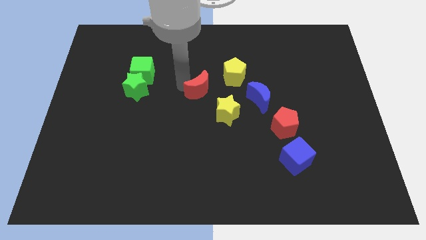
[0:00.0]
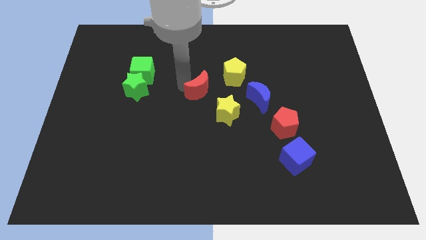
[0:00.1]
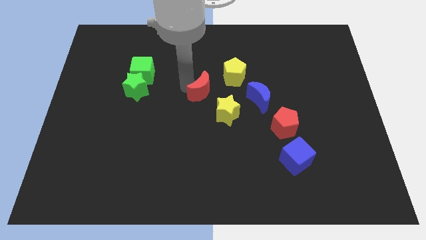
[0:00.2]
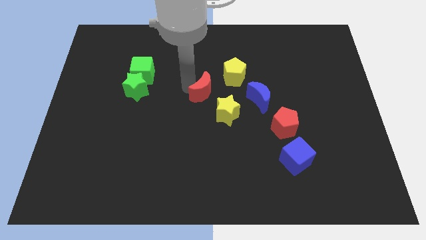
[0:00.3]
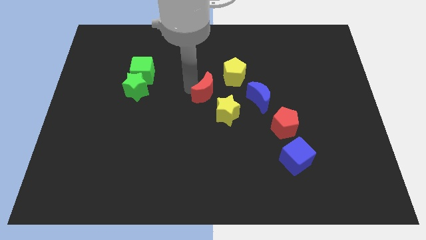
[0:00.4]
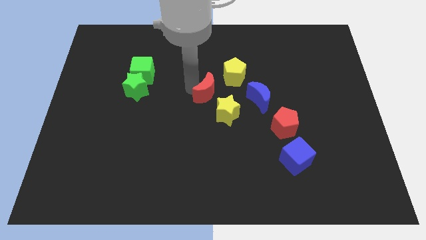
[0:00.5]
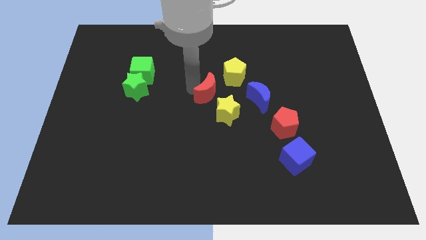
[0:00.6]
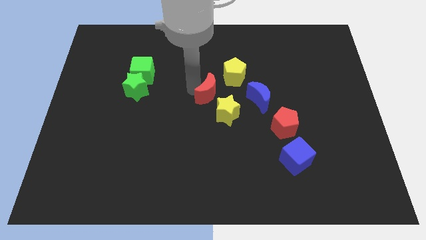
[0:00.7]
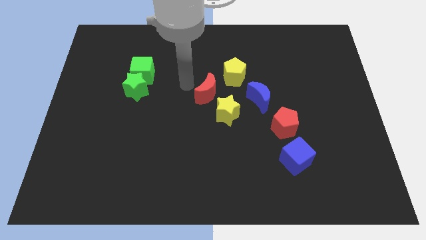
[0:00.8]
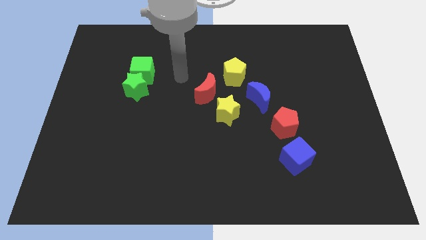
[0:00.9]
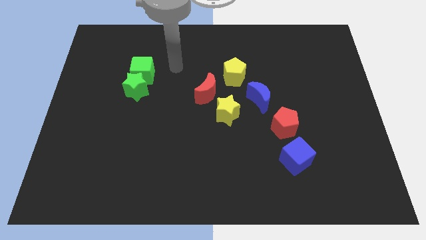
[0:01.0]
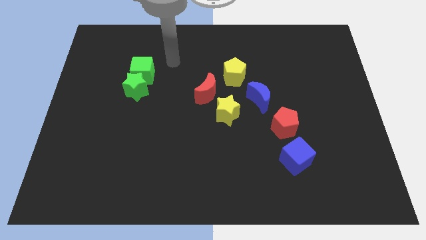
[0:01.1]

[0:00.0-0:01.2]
slightly move the red moon to the center

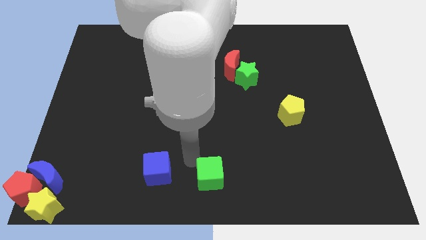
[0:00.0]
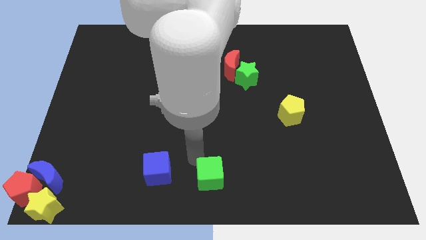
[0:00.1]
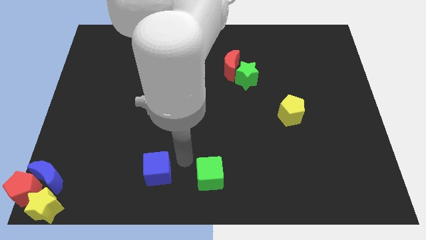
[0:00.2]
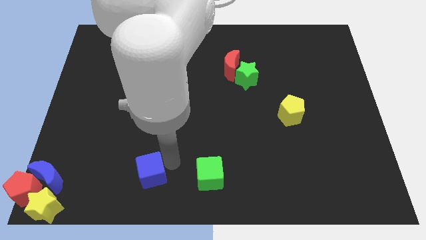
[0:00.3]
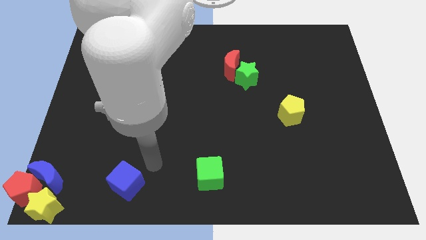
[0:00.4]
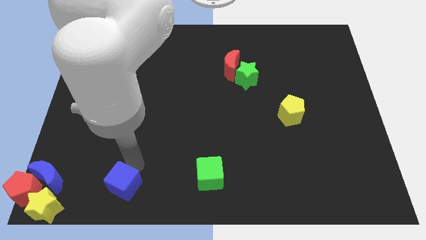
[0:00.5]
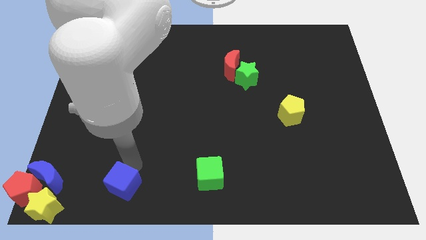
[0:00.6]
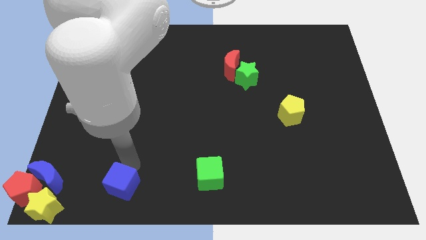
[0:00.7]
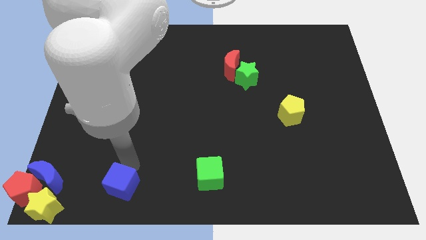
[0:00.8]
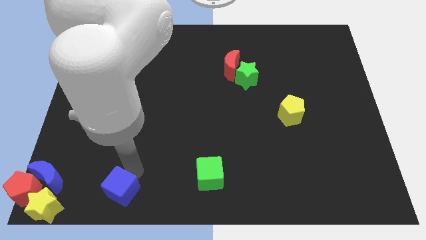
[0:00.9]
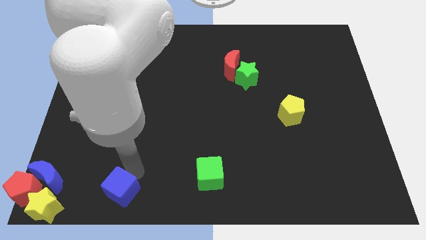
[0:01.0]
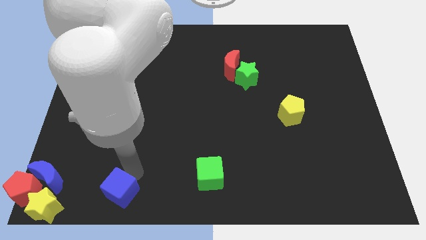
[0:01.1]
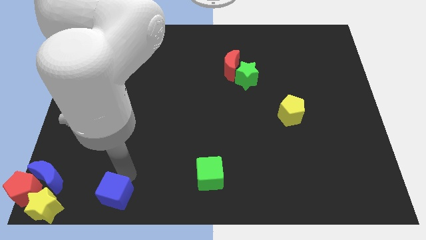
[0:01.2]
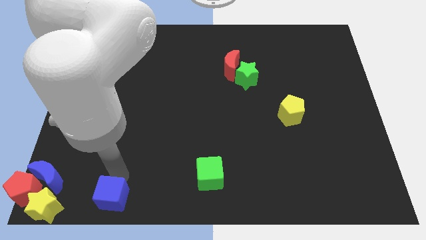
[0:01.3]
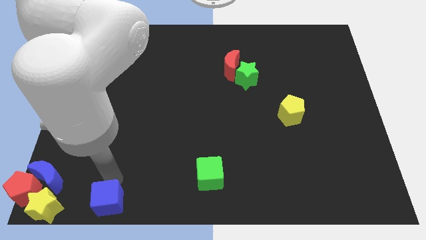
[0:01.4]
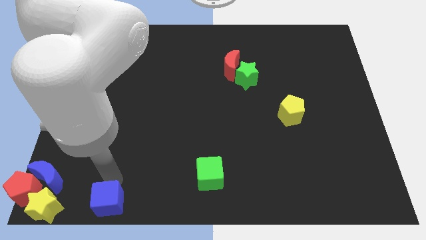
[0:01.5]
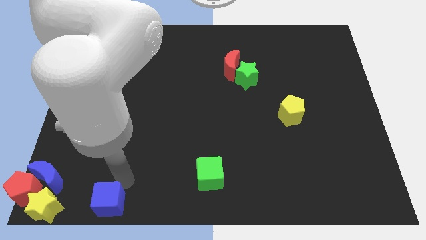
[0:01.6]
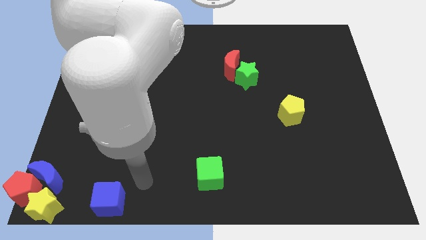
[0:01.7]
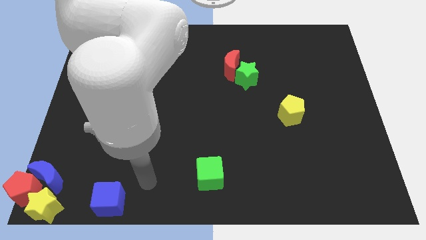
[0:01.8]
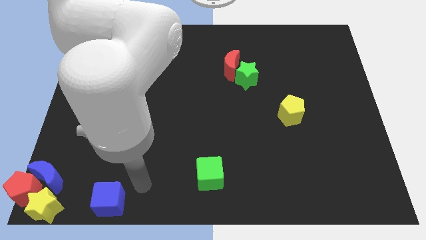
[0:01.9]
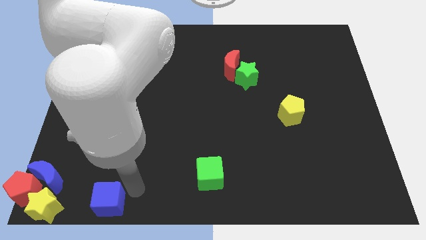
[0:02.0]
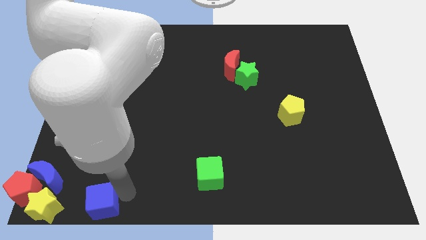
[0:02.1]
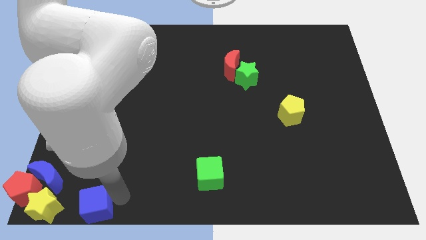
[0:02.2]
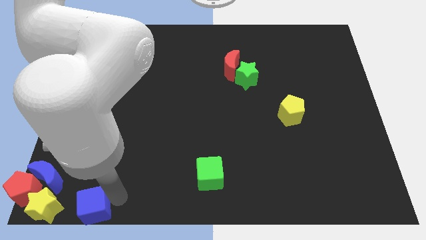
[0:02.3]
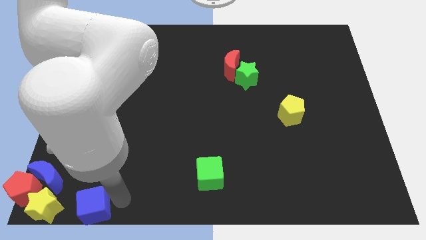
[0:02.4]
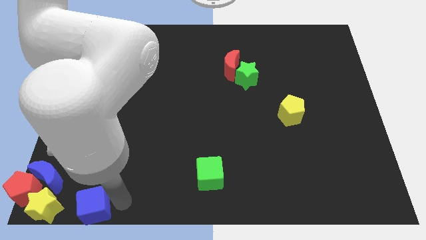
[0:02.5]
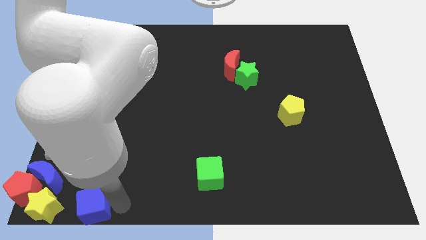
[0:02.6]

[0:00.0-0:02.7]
place the blue cube to the bottom left

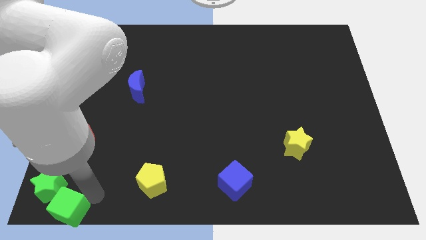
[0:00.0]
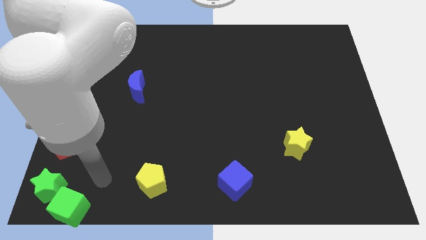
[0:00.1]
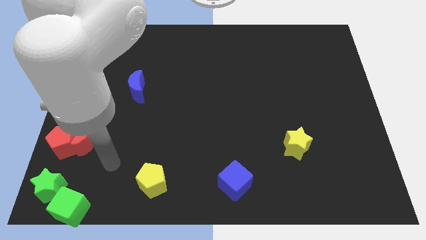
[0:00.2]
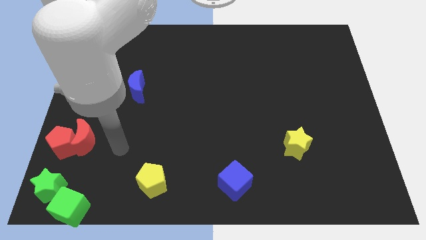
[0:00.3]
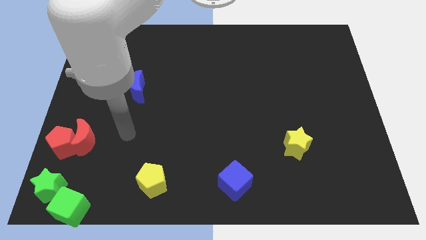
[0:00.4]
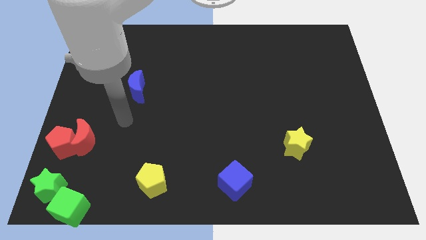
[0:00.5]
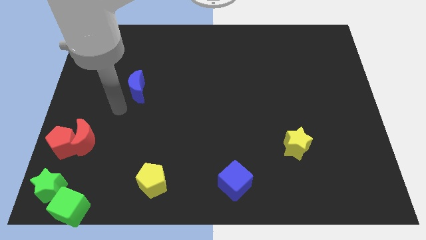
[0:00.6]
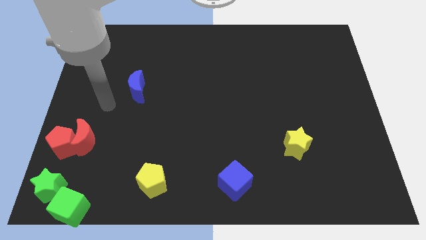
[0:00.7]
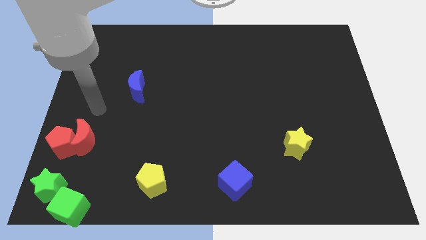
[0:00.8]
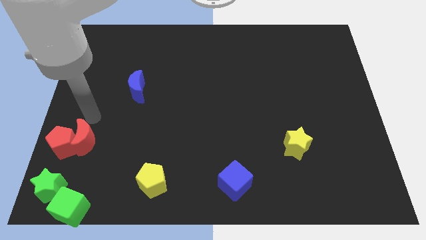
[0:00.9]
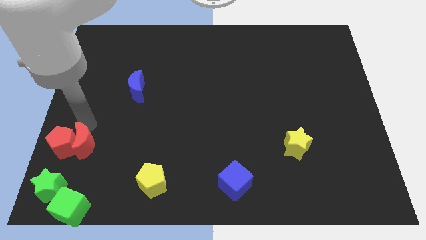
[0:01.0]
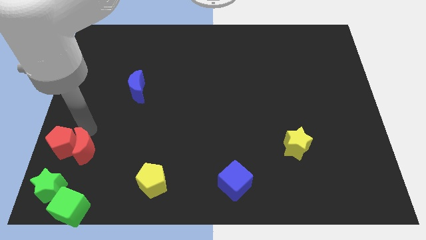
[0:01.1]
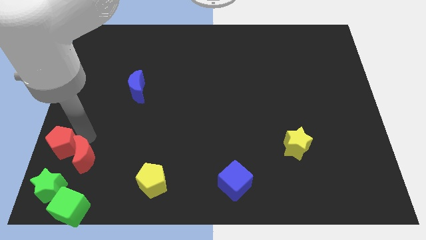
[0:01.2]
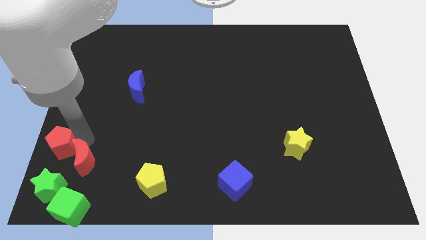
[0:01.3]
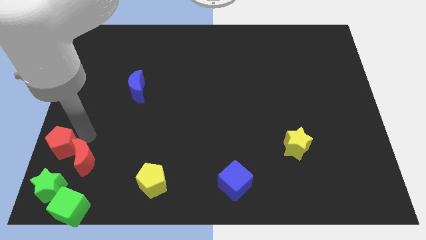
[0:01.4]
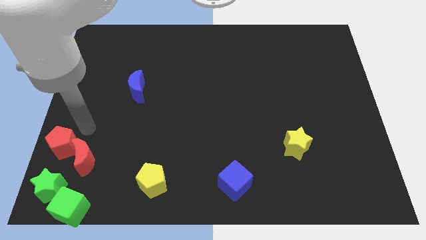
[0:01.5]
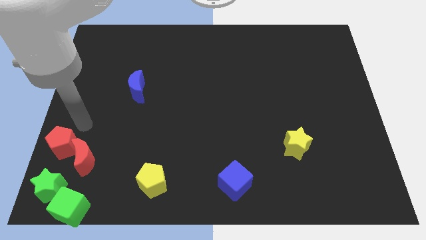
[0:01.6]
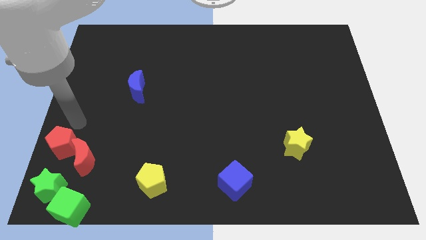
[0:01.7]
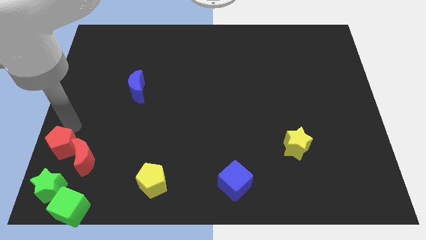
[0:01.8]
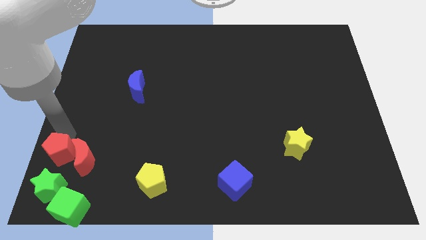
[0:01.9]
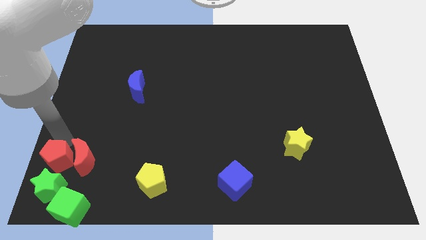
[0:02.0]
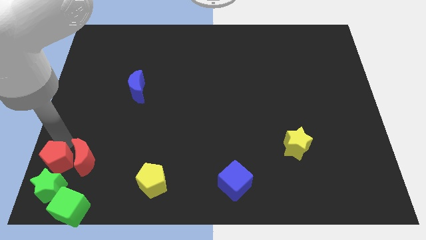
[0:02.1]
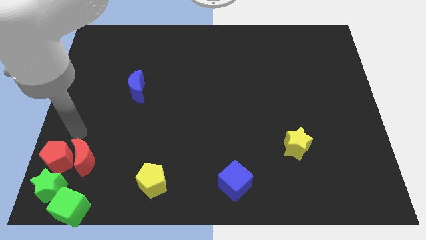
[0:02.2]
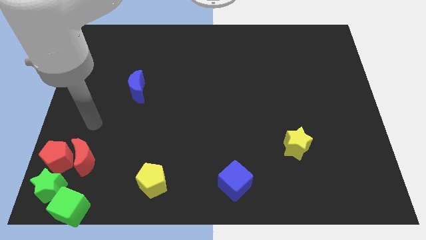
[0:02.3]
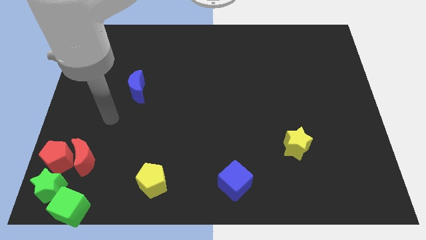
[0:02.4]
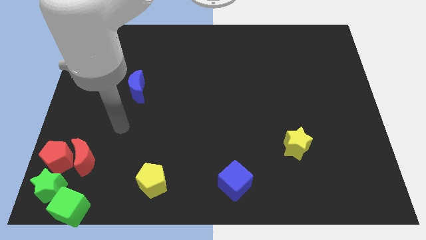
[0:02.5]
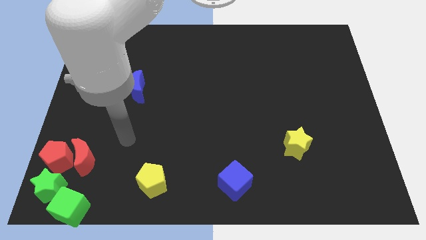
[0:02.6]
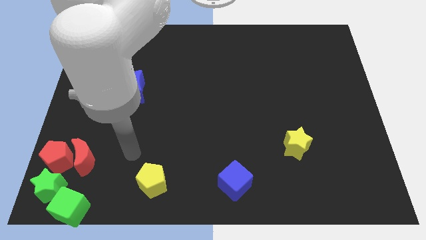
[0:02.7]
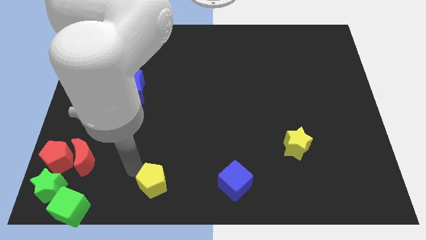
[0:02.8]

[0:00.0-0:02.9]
place red pentagon to the top of green star

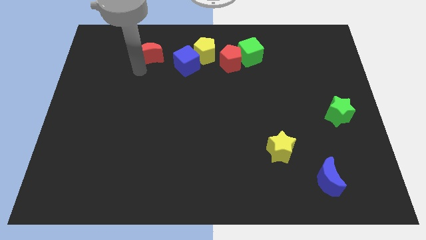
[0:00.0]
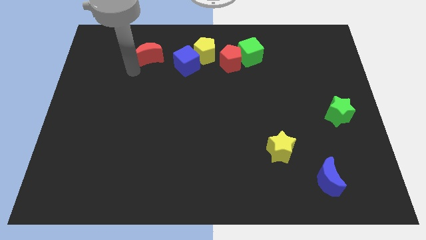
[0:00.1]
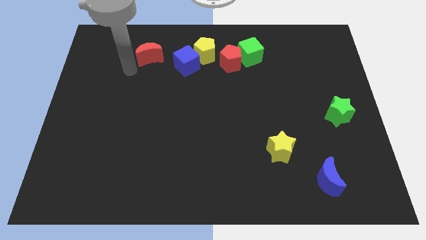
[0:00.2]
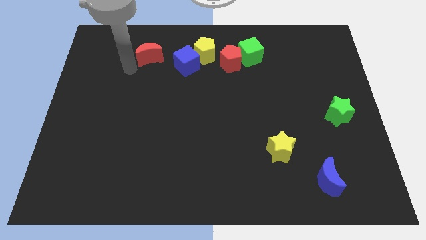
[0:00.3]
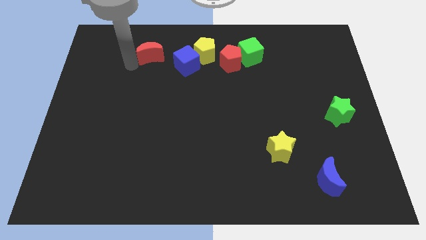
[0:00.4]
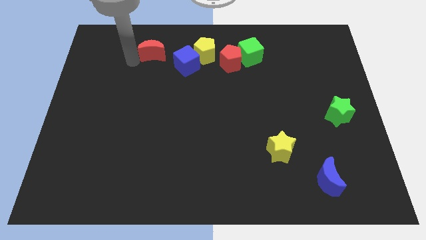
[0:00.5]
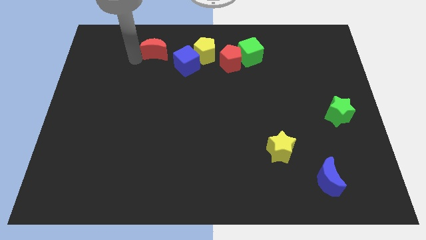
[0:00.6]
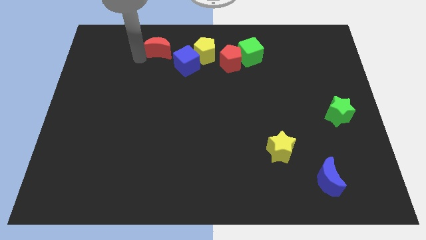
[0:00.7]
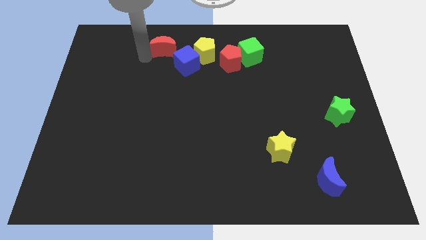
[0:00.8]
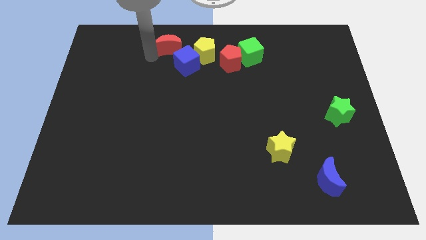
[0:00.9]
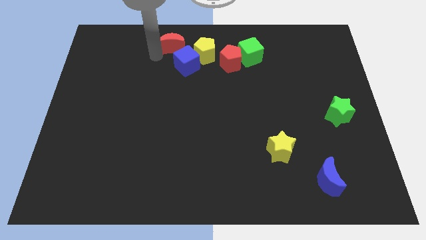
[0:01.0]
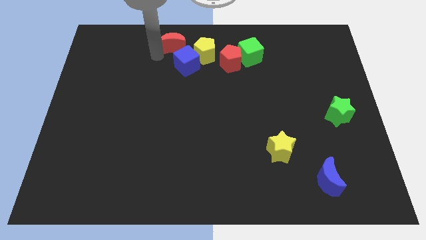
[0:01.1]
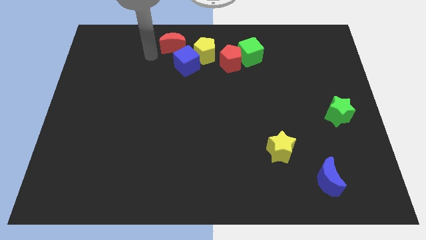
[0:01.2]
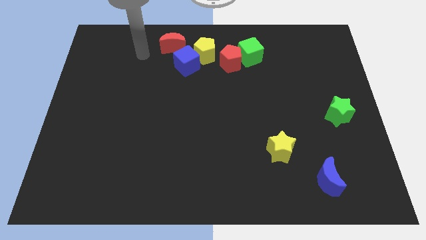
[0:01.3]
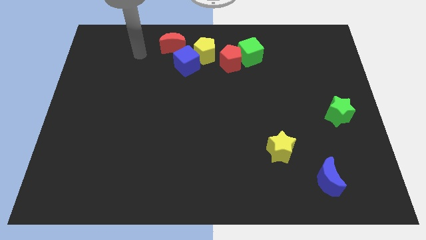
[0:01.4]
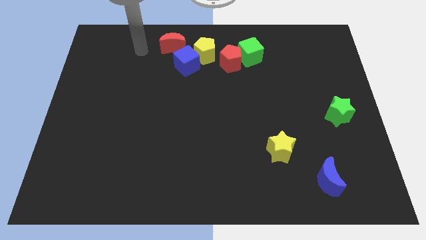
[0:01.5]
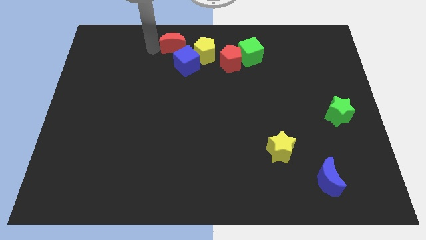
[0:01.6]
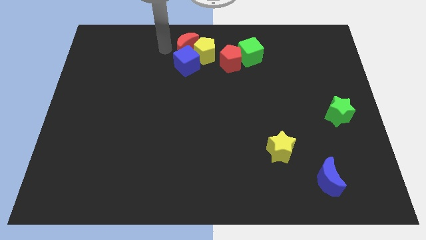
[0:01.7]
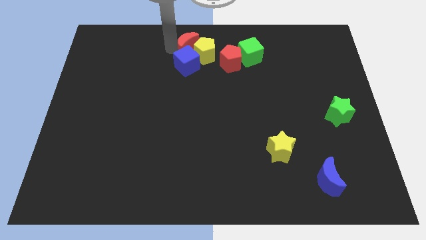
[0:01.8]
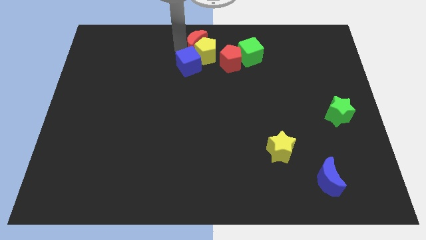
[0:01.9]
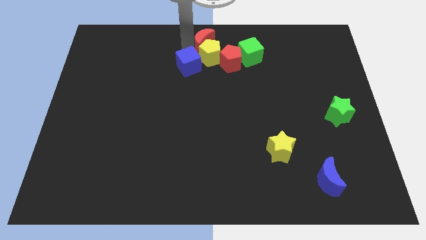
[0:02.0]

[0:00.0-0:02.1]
move the red crescent into the yellow pentagon

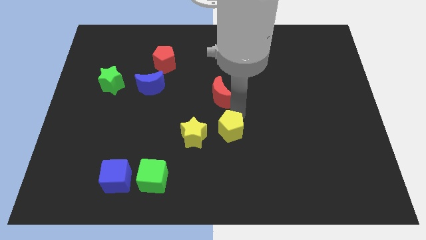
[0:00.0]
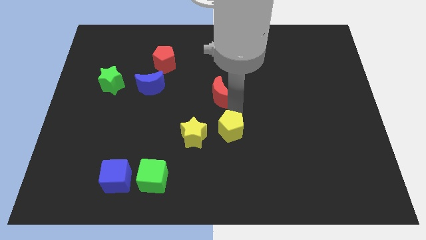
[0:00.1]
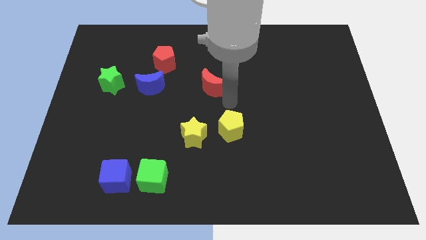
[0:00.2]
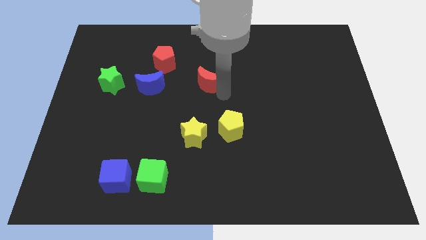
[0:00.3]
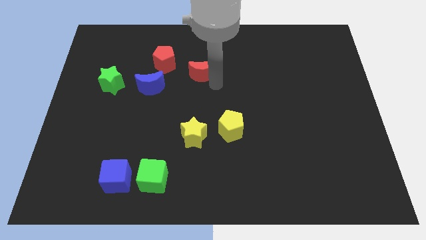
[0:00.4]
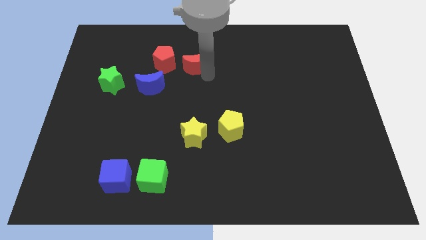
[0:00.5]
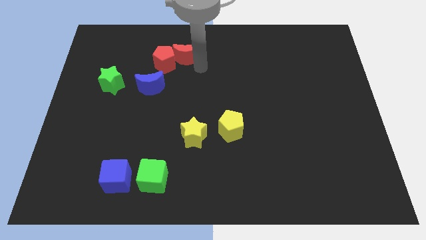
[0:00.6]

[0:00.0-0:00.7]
place the red moon right to the red pentagon
